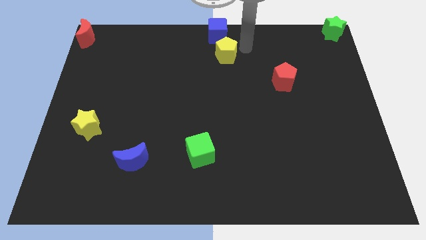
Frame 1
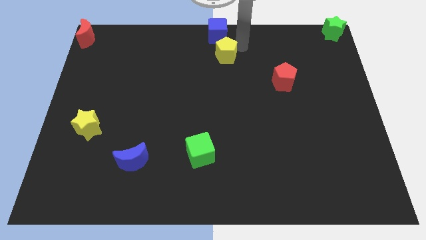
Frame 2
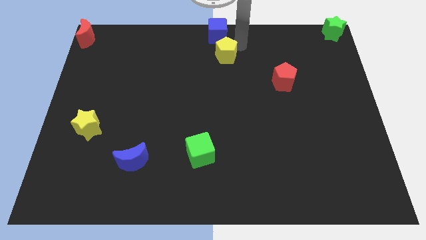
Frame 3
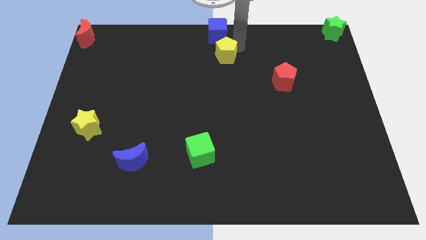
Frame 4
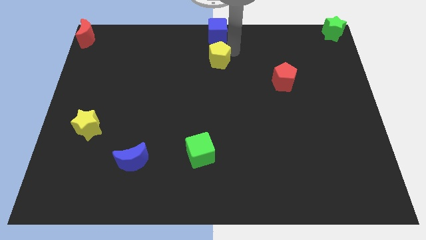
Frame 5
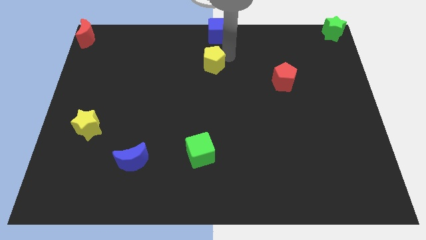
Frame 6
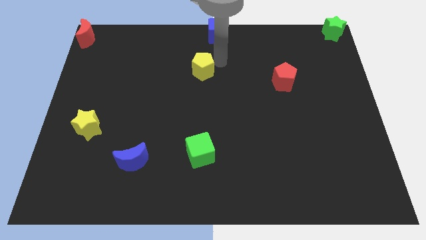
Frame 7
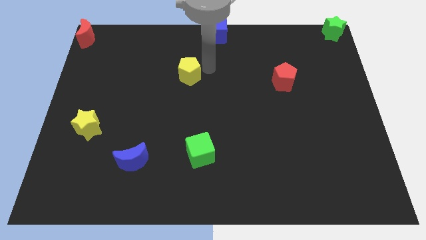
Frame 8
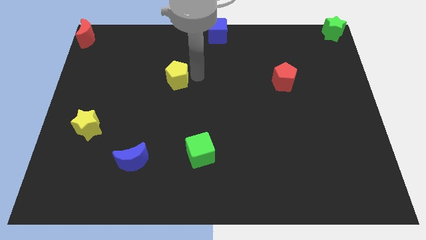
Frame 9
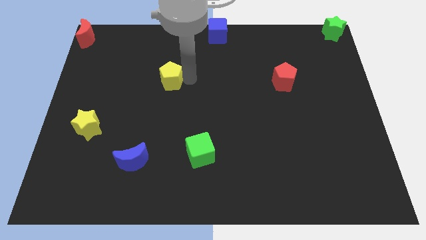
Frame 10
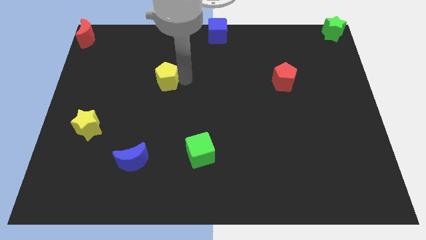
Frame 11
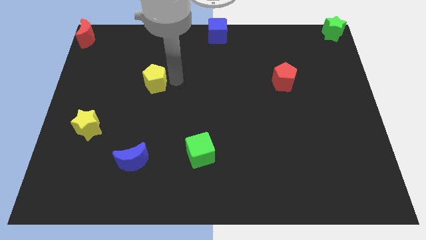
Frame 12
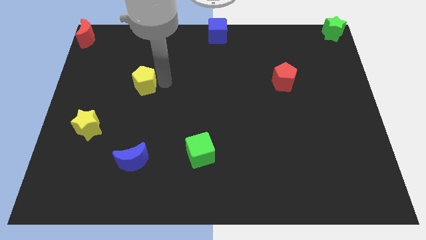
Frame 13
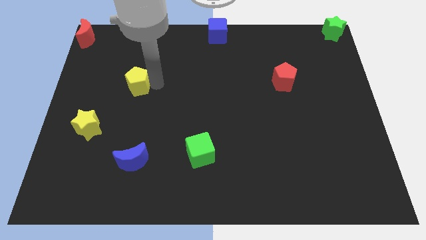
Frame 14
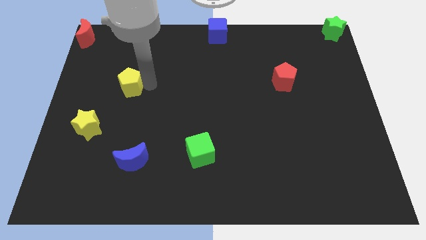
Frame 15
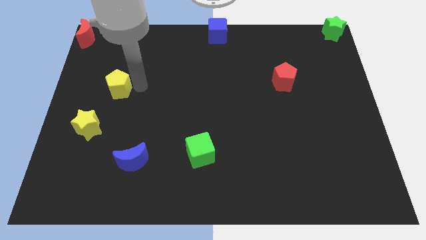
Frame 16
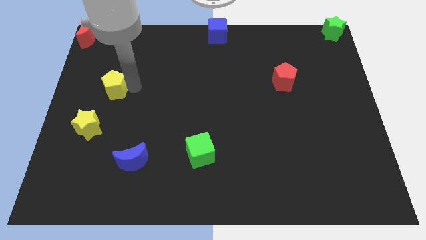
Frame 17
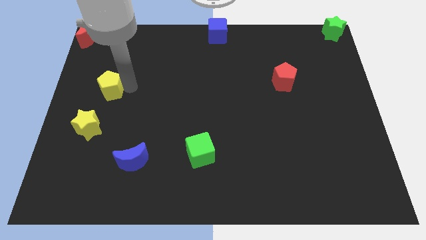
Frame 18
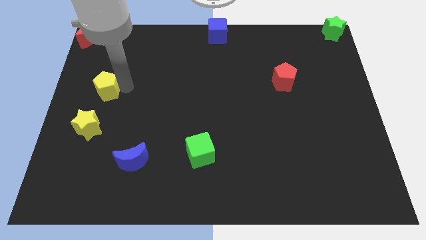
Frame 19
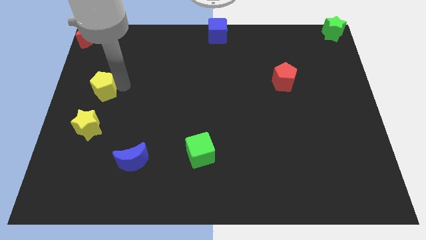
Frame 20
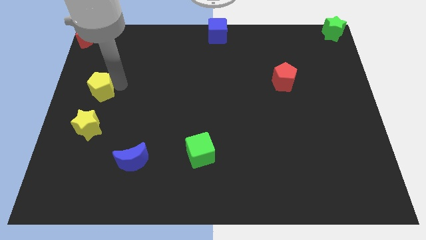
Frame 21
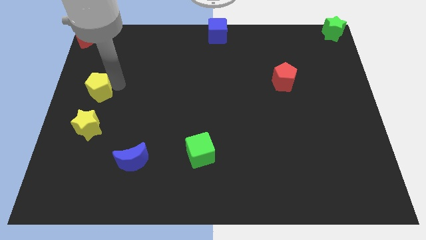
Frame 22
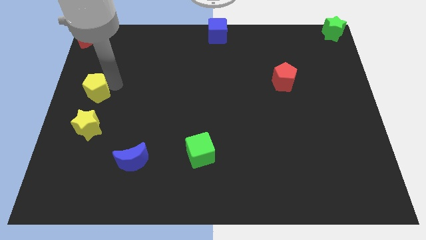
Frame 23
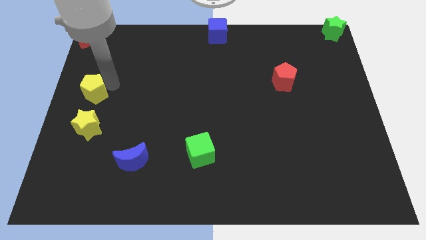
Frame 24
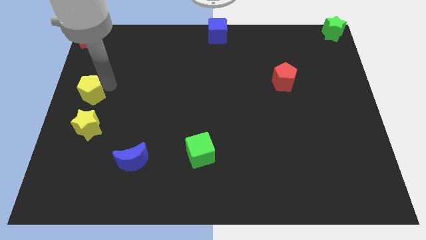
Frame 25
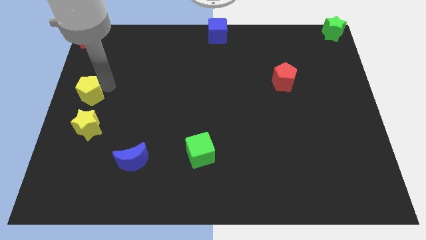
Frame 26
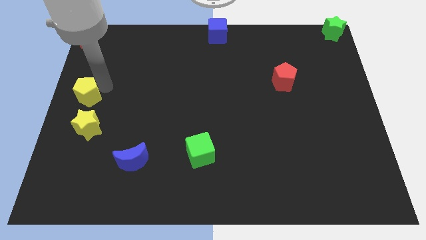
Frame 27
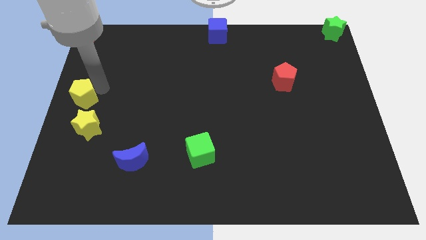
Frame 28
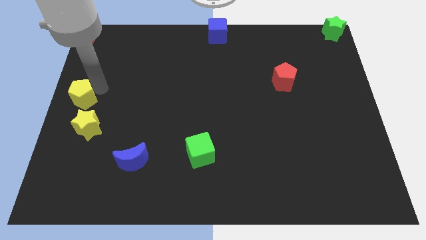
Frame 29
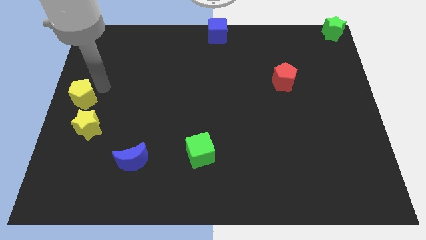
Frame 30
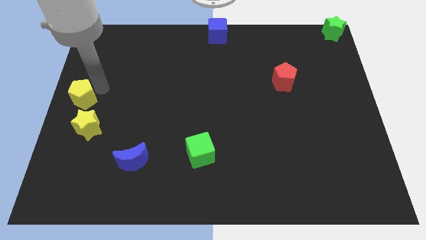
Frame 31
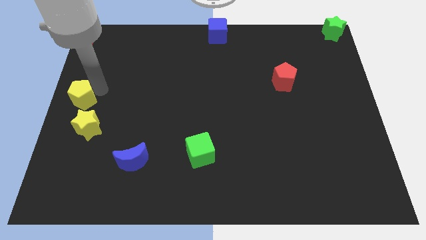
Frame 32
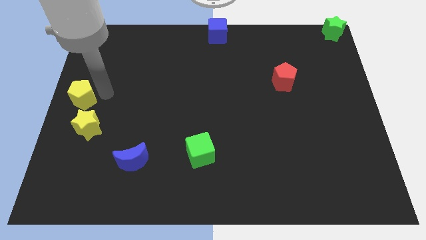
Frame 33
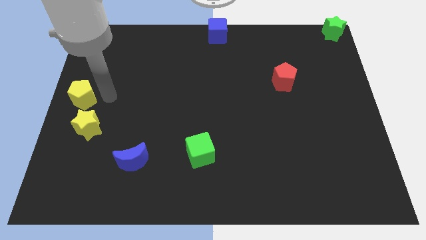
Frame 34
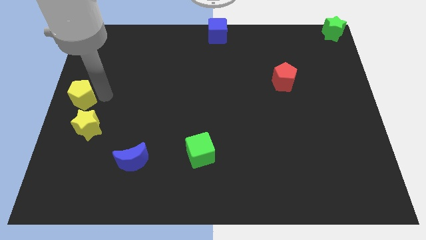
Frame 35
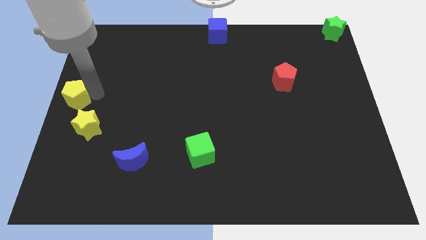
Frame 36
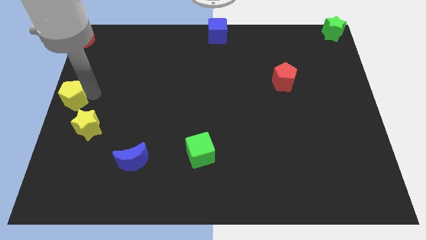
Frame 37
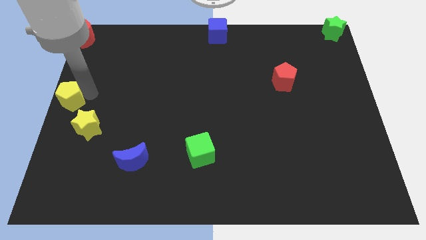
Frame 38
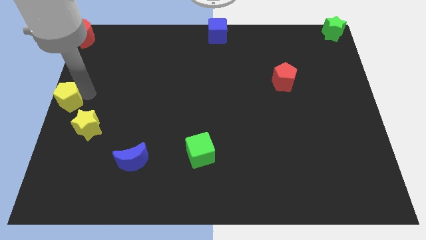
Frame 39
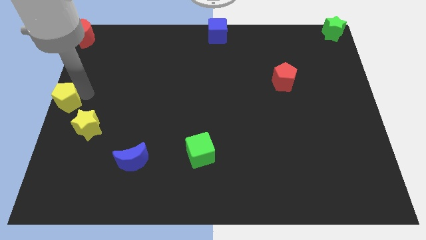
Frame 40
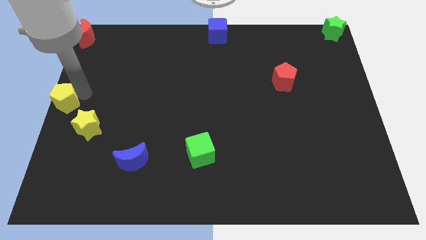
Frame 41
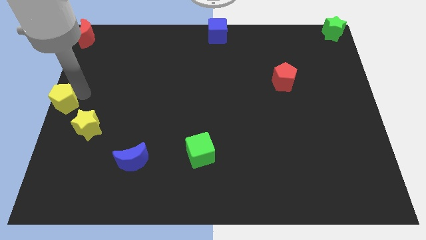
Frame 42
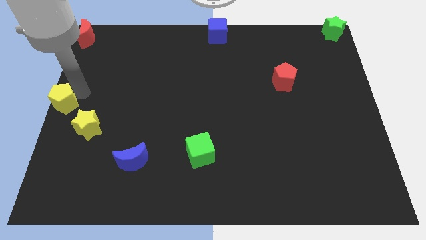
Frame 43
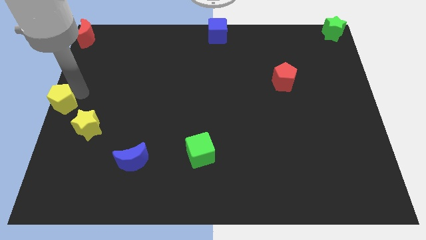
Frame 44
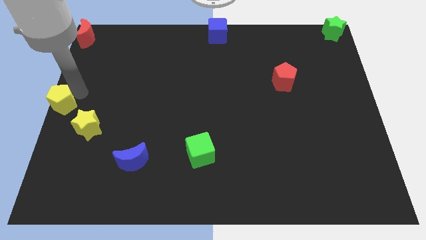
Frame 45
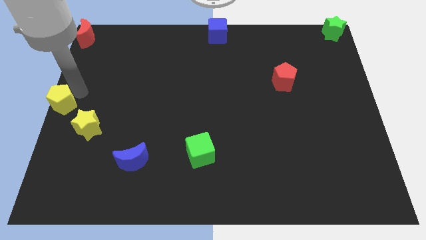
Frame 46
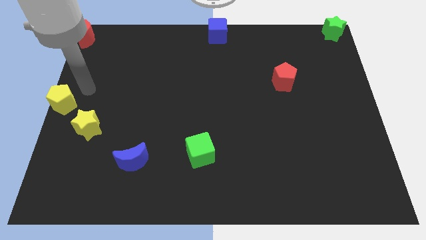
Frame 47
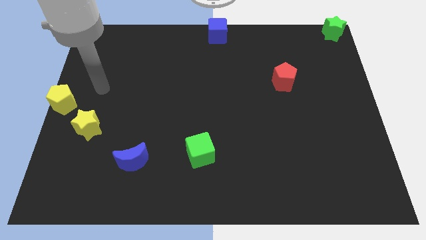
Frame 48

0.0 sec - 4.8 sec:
place the yellow pentagon vertically below red moon

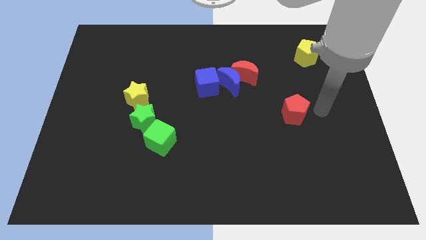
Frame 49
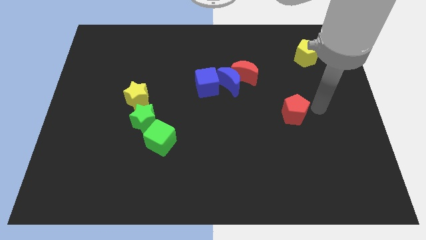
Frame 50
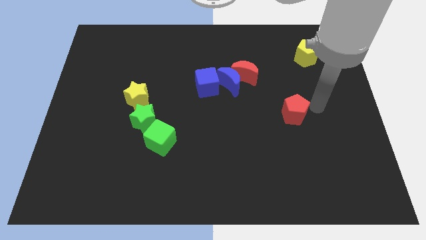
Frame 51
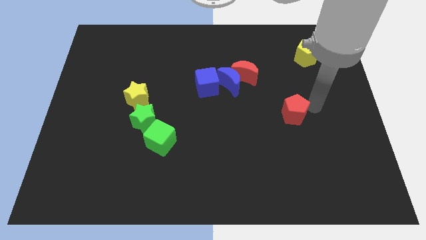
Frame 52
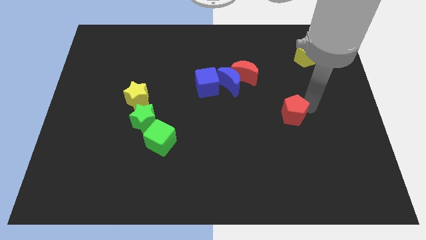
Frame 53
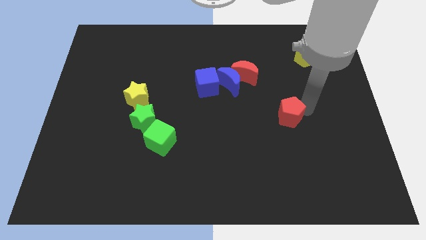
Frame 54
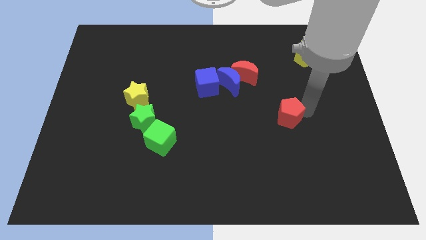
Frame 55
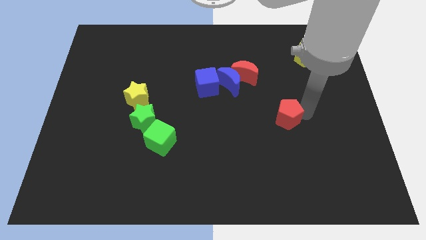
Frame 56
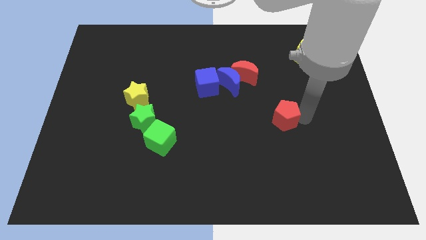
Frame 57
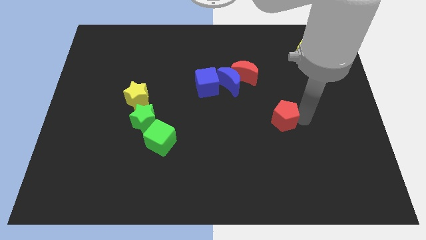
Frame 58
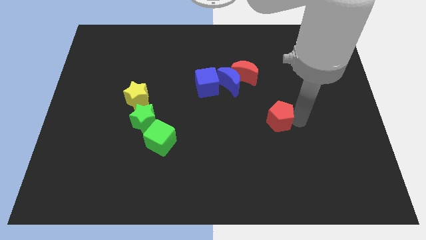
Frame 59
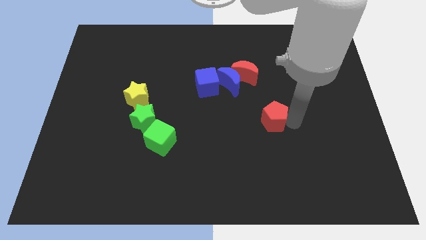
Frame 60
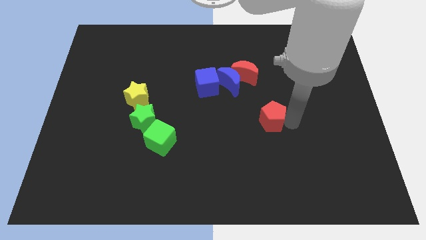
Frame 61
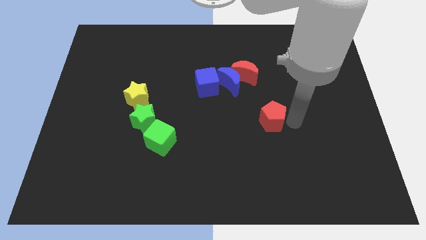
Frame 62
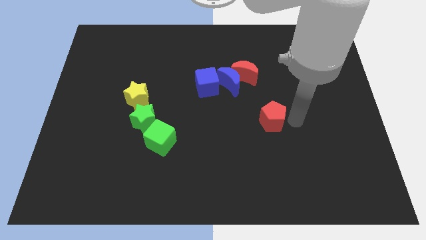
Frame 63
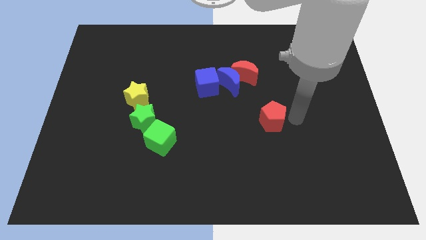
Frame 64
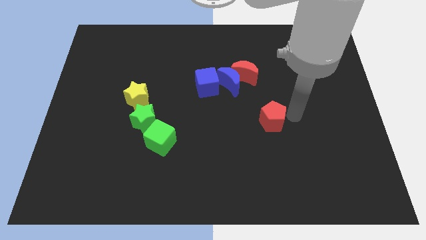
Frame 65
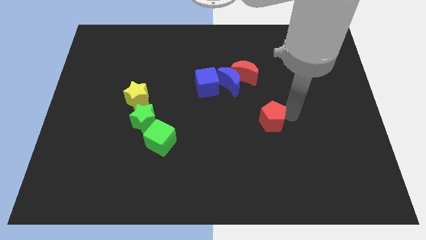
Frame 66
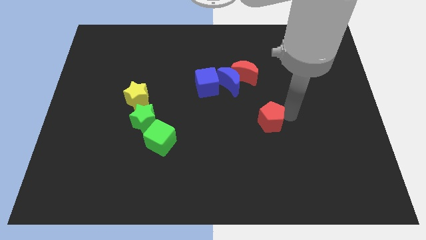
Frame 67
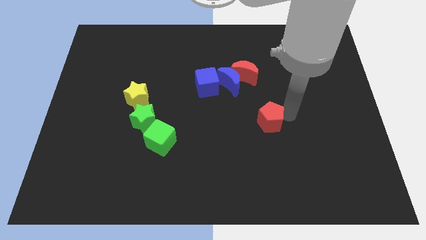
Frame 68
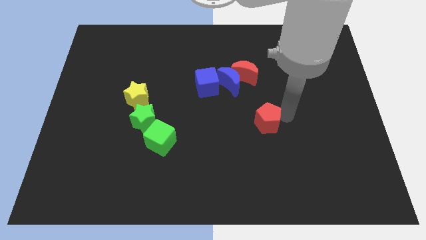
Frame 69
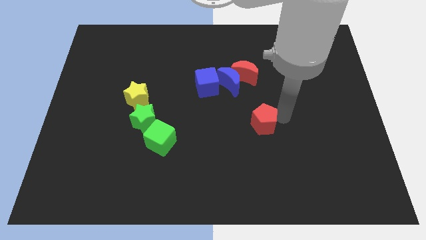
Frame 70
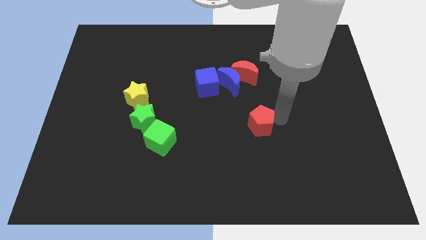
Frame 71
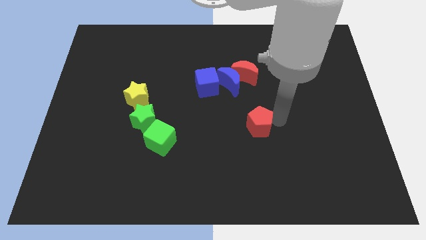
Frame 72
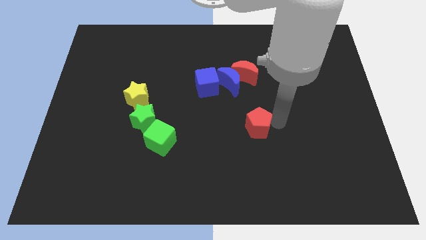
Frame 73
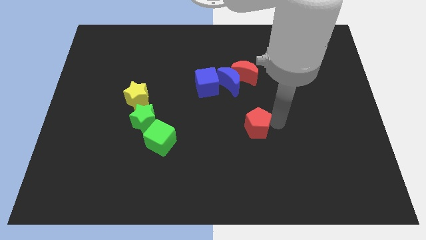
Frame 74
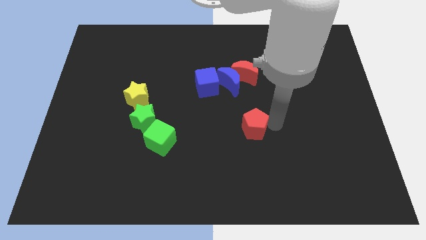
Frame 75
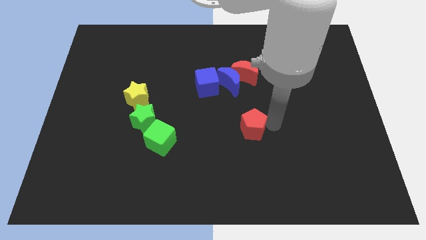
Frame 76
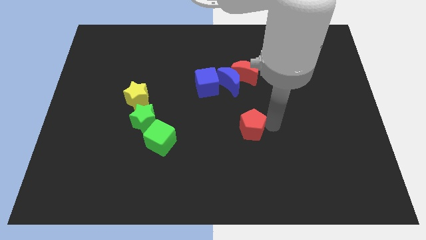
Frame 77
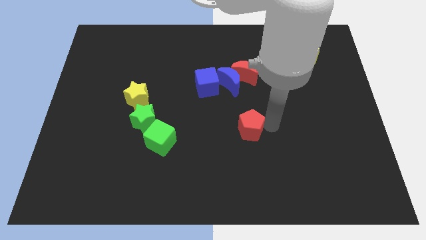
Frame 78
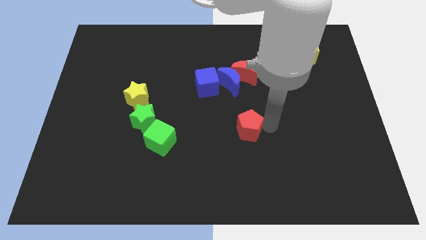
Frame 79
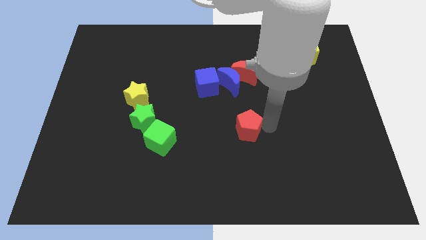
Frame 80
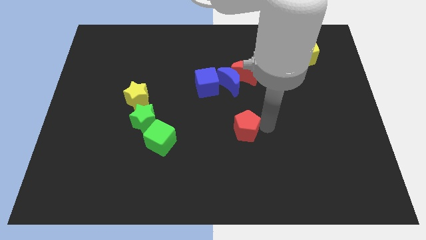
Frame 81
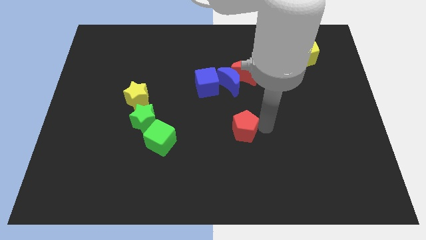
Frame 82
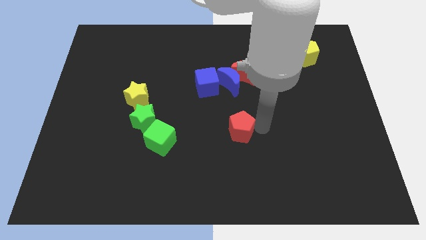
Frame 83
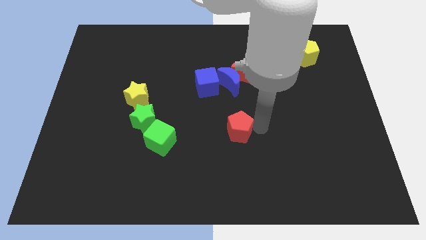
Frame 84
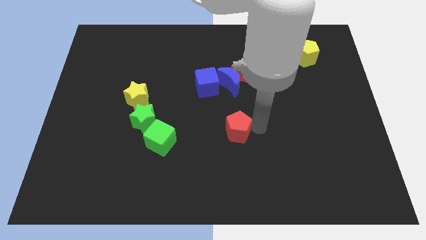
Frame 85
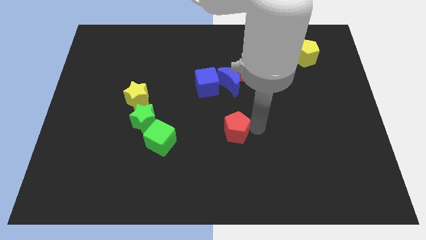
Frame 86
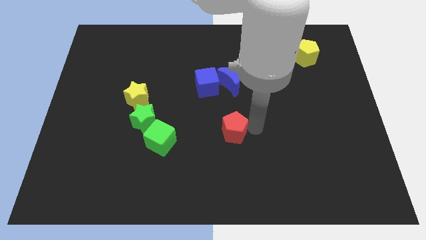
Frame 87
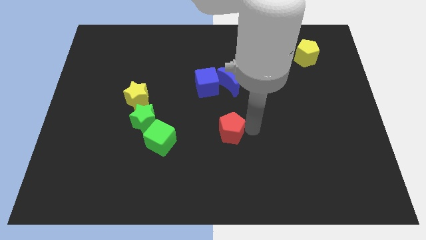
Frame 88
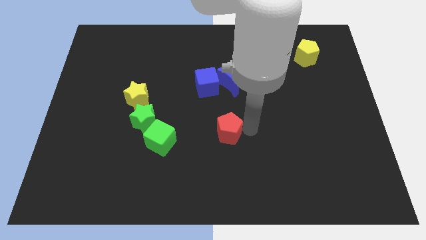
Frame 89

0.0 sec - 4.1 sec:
slide the red pentagon to the center of the board
